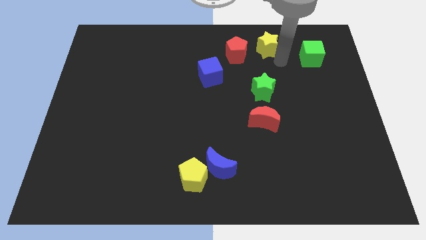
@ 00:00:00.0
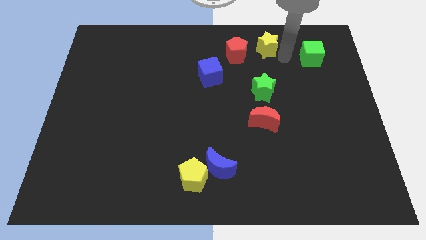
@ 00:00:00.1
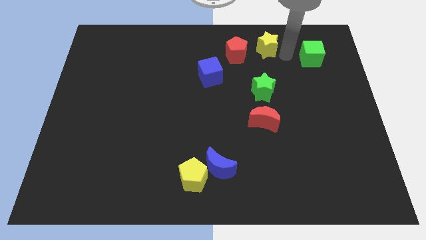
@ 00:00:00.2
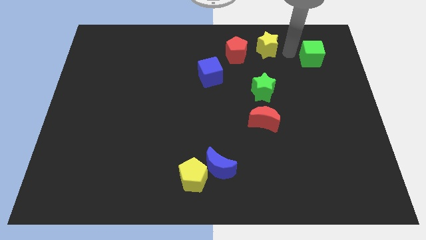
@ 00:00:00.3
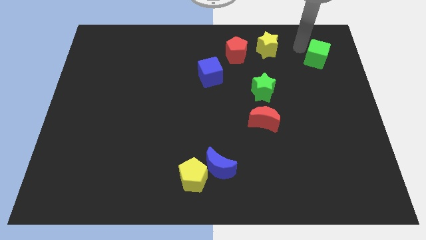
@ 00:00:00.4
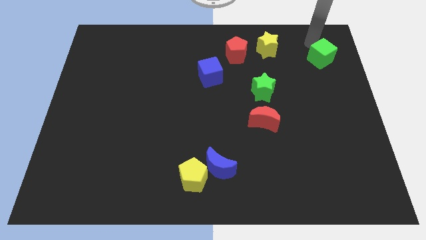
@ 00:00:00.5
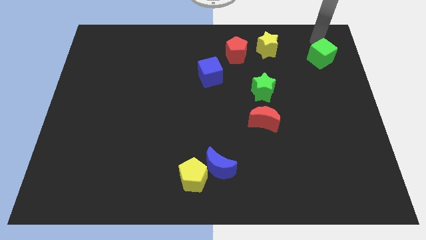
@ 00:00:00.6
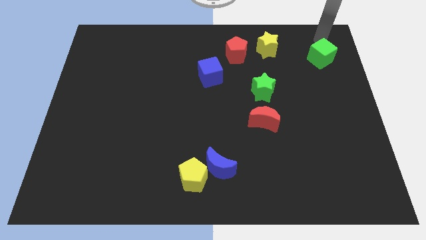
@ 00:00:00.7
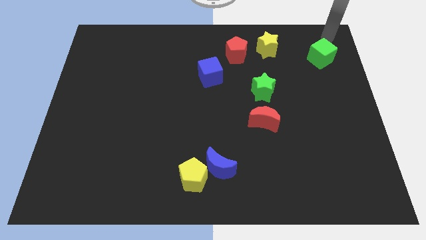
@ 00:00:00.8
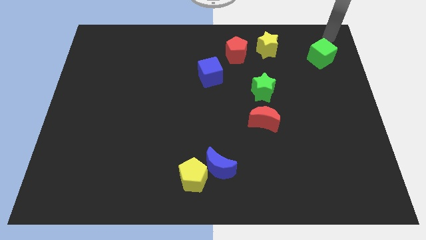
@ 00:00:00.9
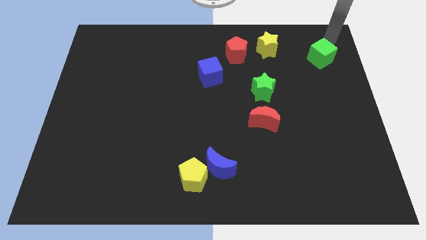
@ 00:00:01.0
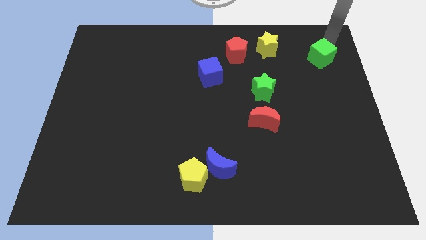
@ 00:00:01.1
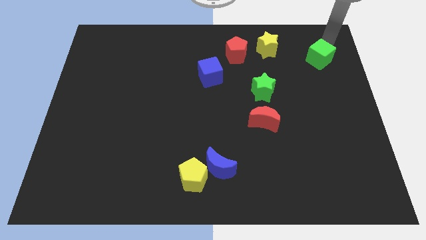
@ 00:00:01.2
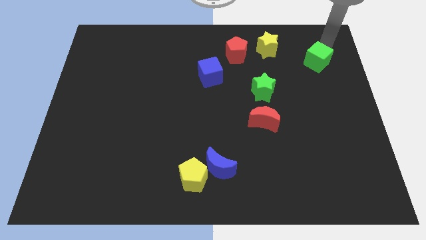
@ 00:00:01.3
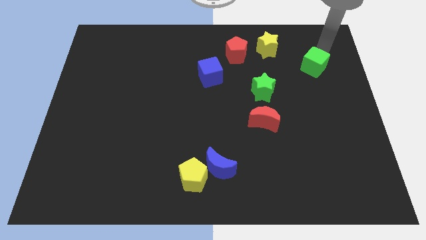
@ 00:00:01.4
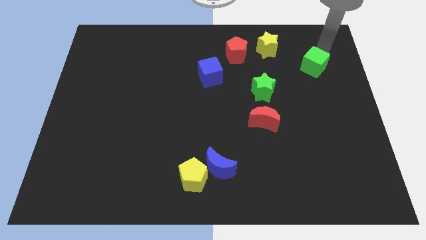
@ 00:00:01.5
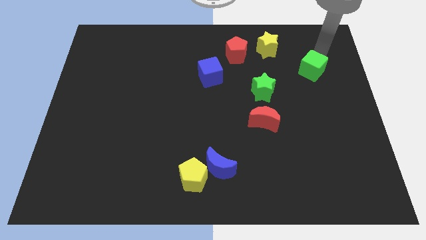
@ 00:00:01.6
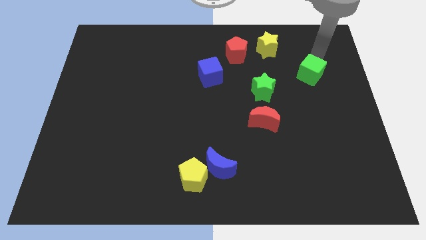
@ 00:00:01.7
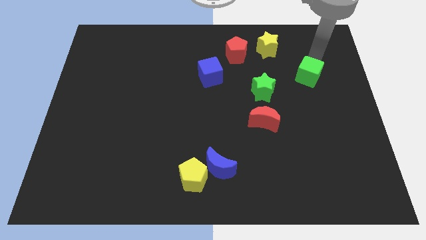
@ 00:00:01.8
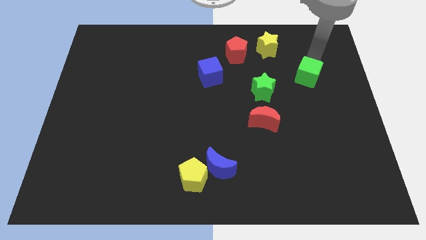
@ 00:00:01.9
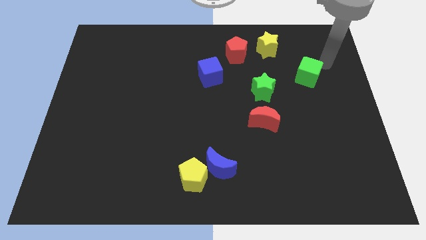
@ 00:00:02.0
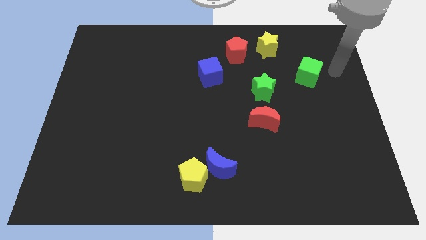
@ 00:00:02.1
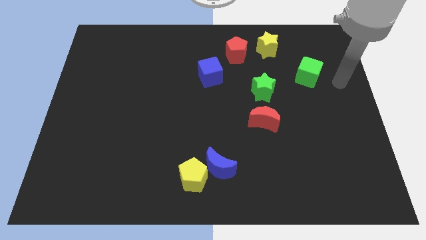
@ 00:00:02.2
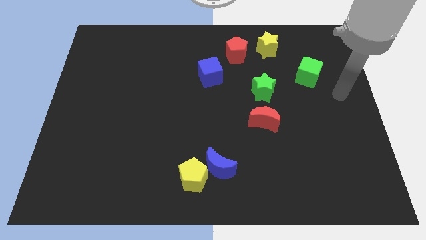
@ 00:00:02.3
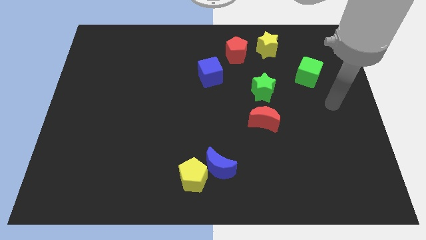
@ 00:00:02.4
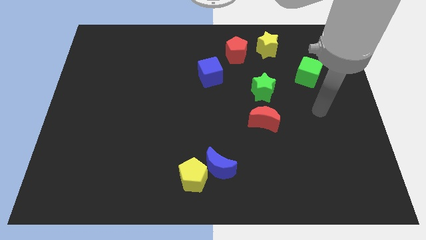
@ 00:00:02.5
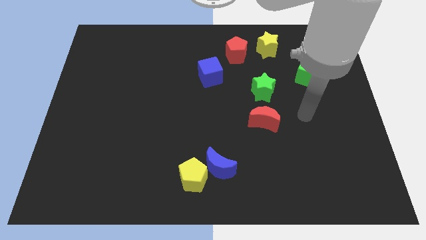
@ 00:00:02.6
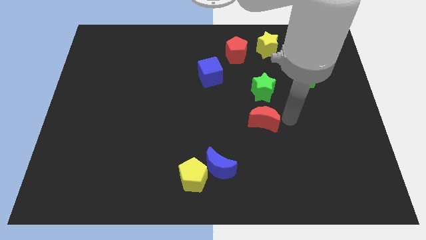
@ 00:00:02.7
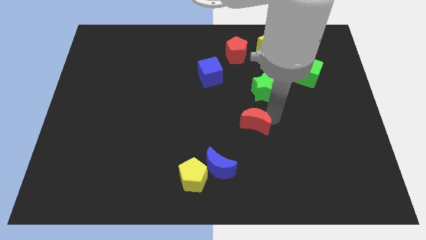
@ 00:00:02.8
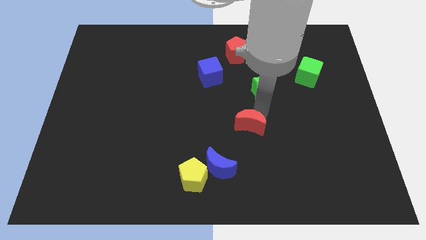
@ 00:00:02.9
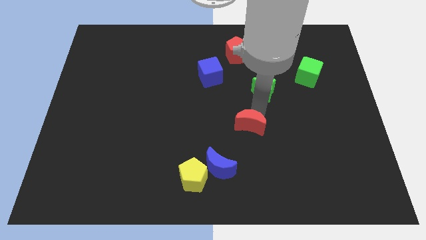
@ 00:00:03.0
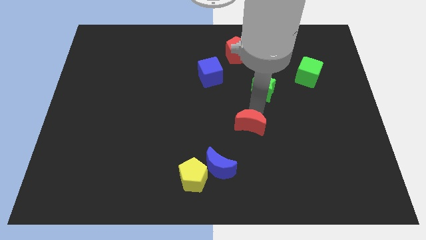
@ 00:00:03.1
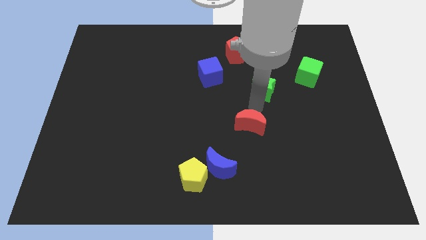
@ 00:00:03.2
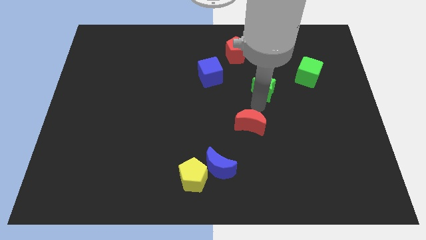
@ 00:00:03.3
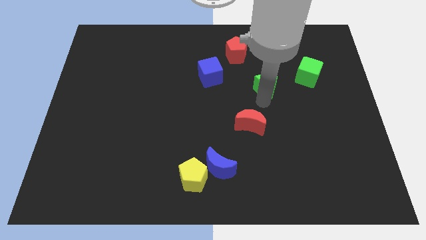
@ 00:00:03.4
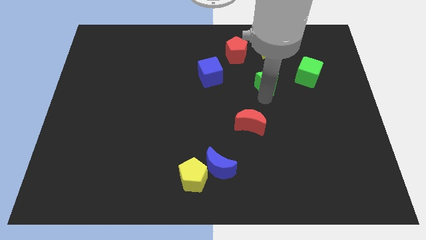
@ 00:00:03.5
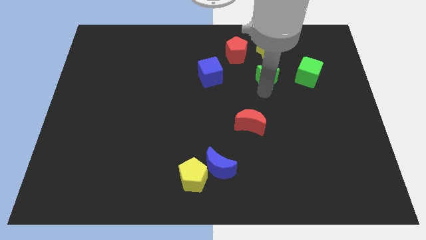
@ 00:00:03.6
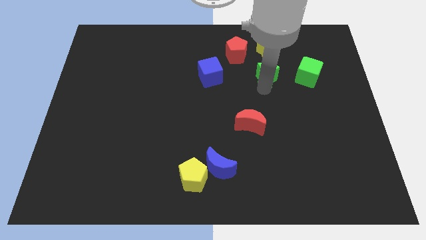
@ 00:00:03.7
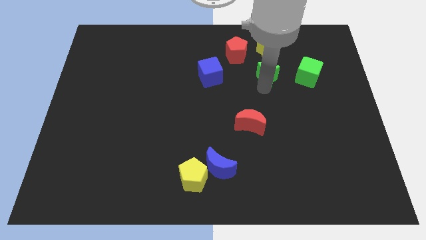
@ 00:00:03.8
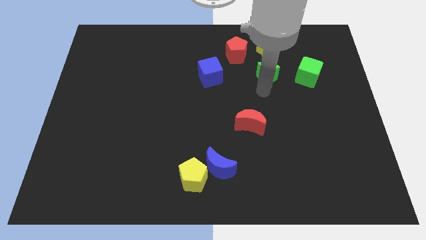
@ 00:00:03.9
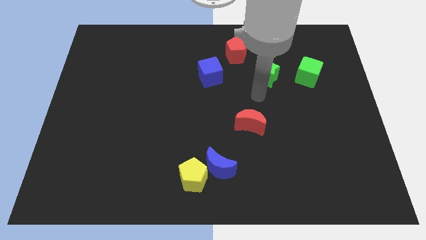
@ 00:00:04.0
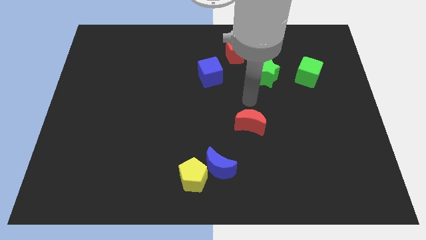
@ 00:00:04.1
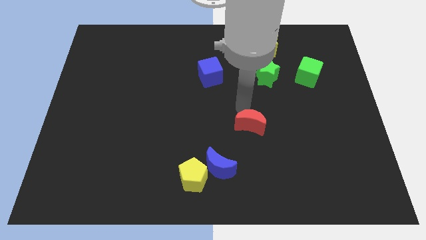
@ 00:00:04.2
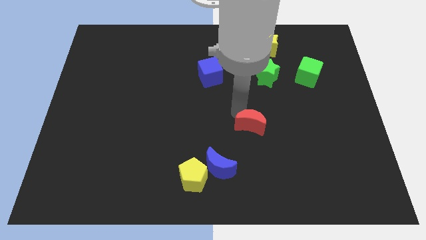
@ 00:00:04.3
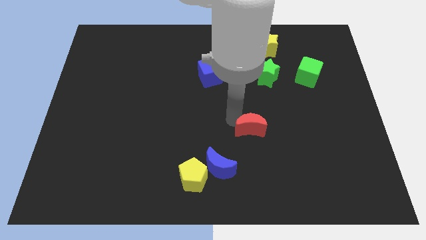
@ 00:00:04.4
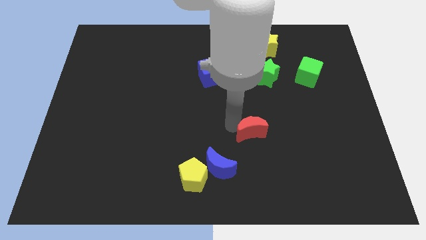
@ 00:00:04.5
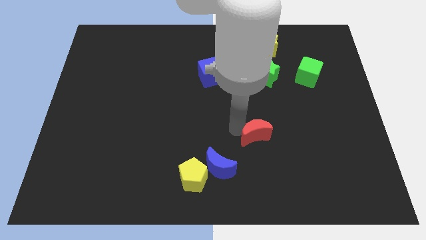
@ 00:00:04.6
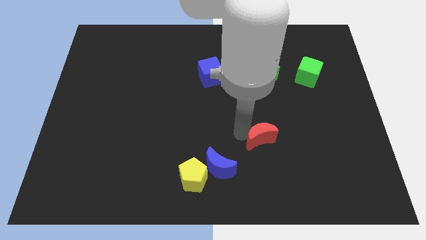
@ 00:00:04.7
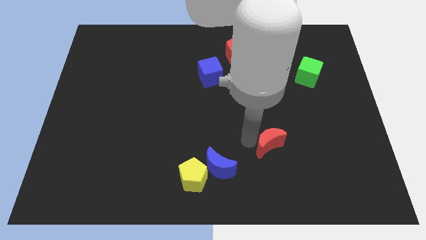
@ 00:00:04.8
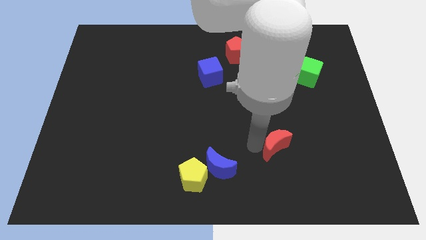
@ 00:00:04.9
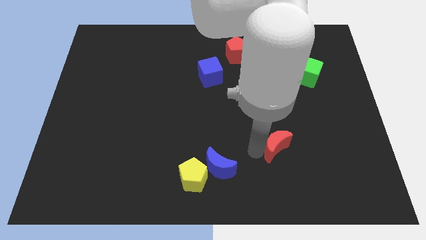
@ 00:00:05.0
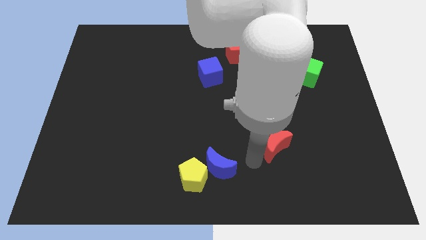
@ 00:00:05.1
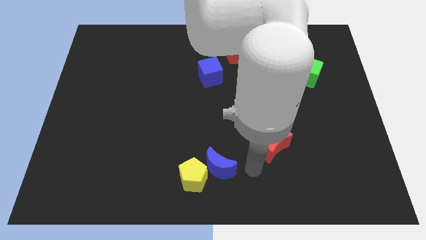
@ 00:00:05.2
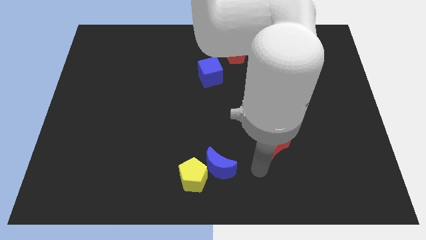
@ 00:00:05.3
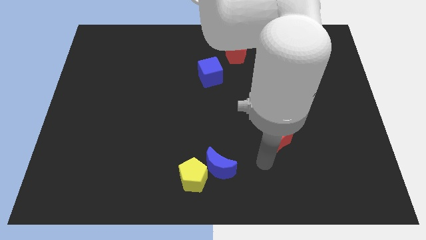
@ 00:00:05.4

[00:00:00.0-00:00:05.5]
push the red moon on right to the blue moon

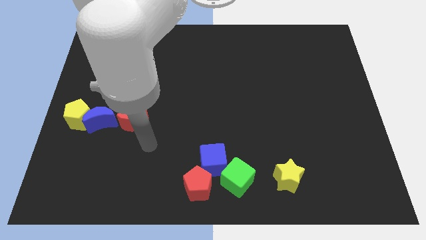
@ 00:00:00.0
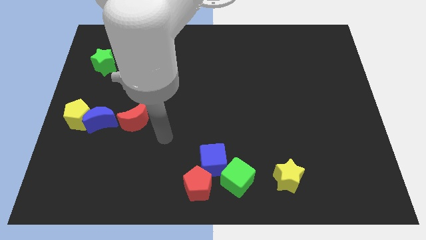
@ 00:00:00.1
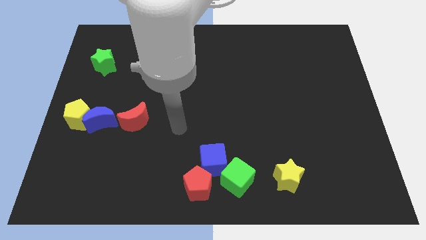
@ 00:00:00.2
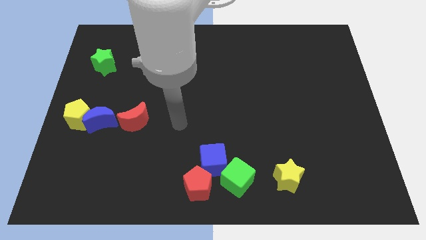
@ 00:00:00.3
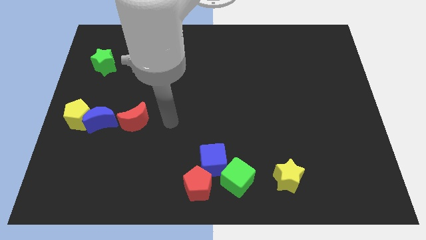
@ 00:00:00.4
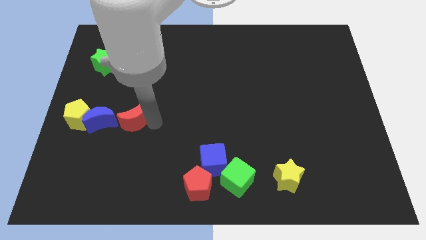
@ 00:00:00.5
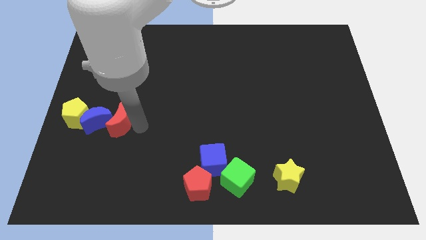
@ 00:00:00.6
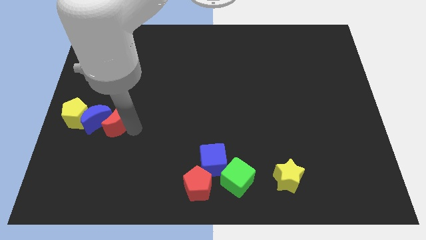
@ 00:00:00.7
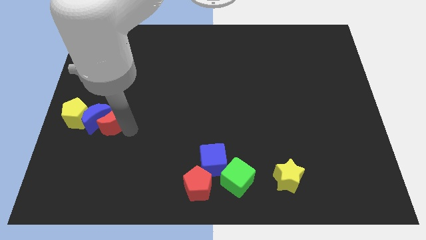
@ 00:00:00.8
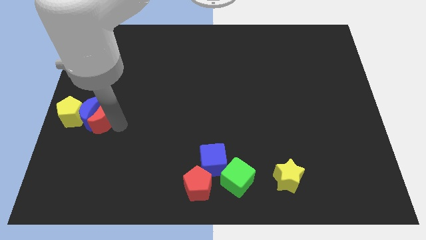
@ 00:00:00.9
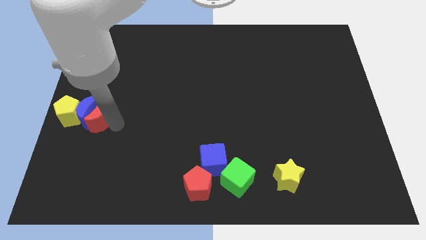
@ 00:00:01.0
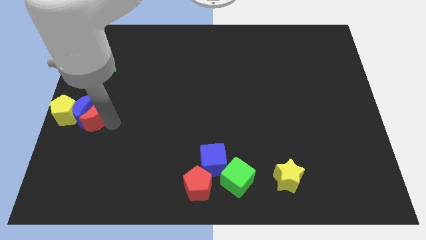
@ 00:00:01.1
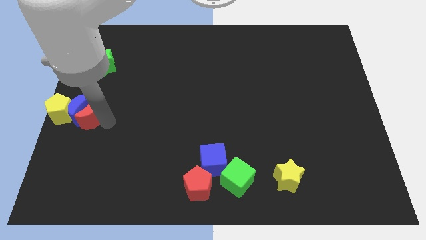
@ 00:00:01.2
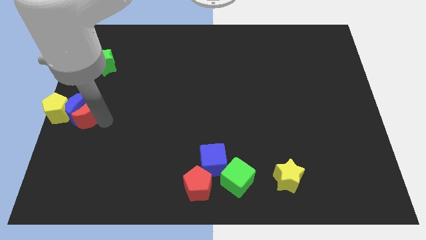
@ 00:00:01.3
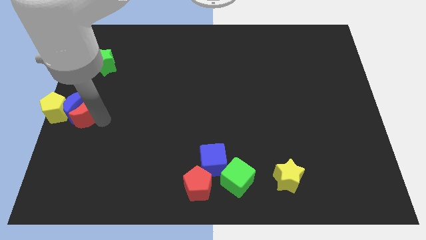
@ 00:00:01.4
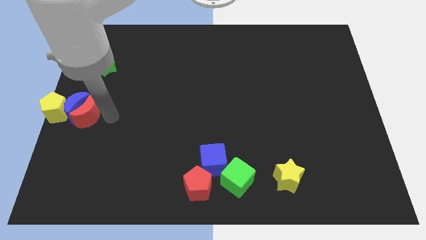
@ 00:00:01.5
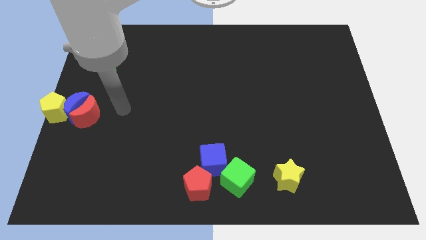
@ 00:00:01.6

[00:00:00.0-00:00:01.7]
push the group of the block towards the top left of the center of the board

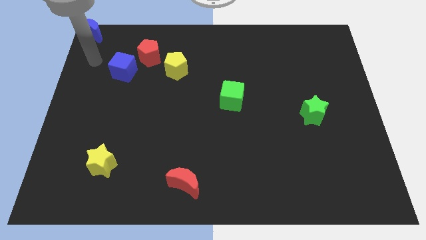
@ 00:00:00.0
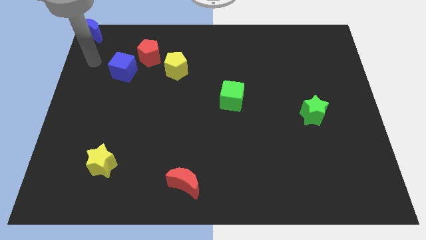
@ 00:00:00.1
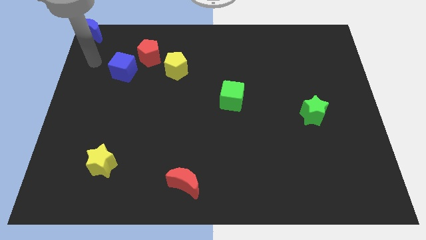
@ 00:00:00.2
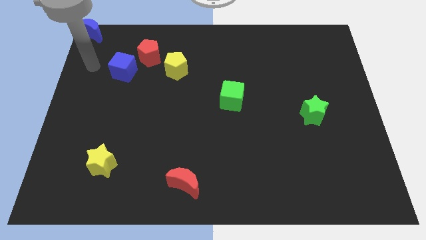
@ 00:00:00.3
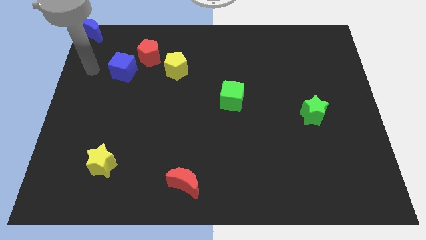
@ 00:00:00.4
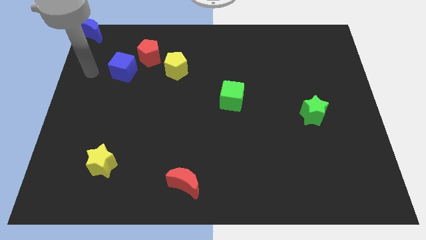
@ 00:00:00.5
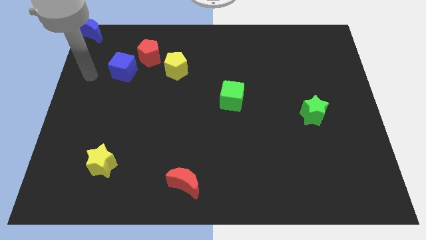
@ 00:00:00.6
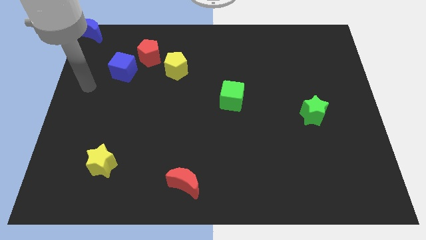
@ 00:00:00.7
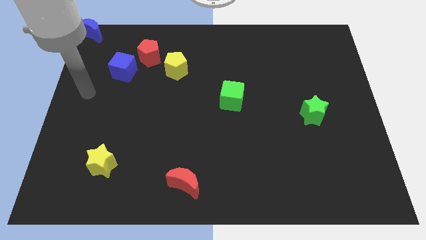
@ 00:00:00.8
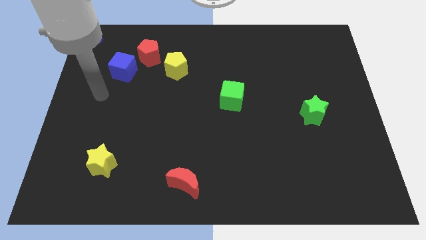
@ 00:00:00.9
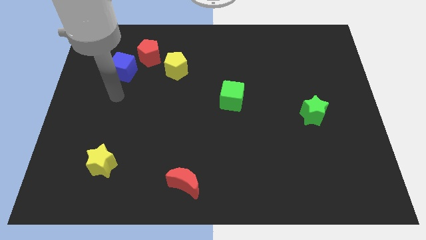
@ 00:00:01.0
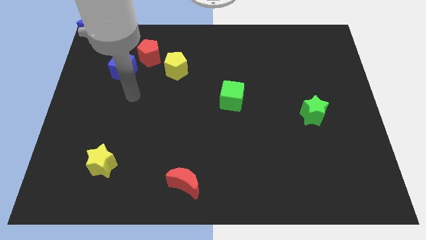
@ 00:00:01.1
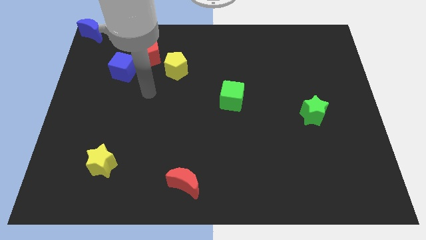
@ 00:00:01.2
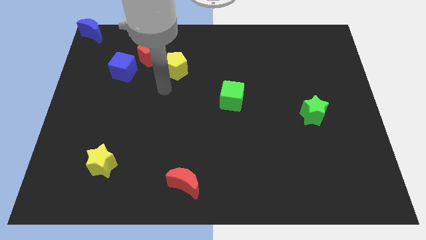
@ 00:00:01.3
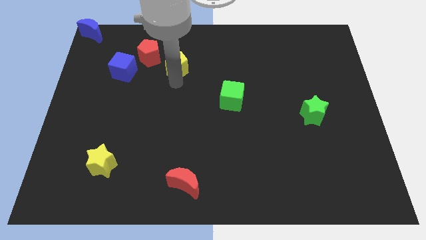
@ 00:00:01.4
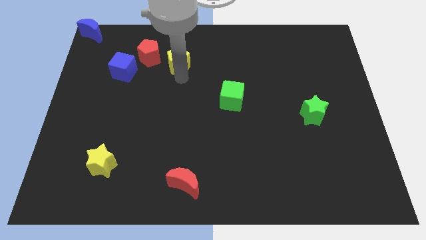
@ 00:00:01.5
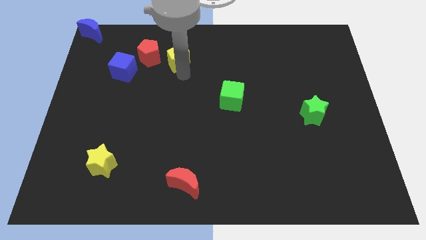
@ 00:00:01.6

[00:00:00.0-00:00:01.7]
place the arm below the yellow pentagon
